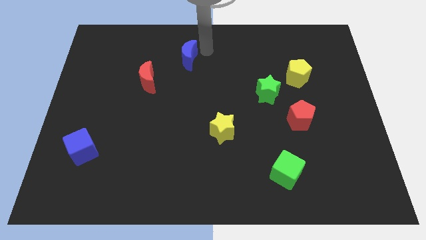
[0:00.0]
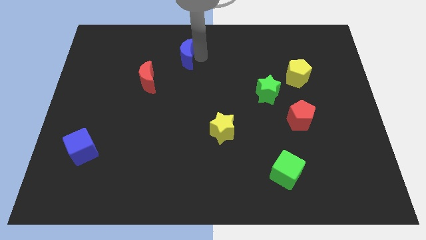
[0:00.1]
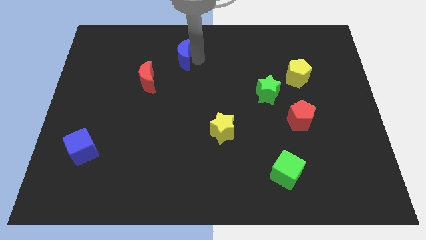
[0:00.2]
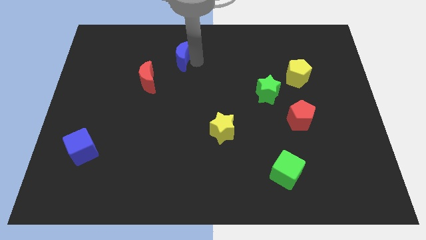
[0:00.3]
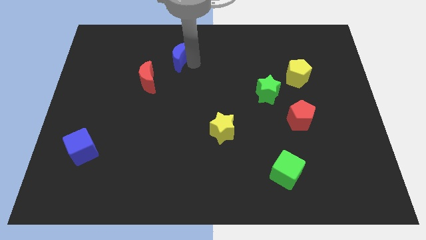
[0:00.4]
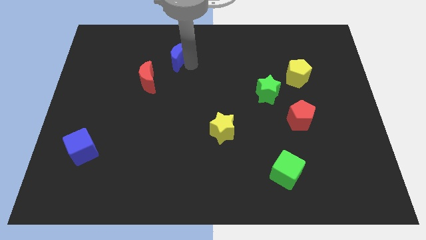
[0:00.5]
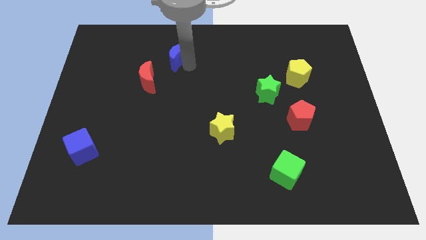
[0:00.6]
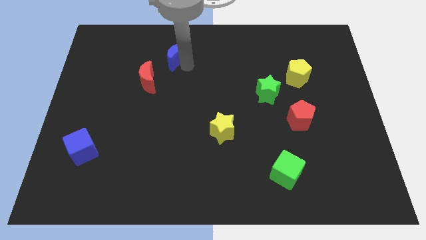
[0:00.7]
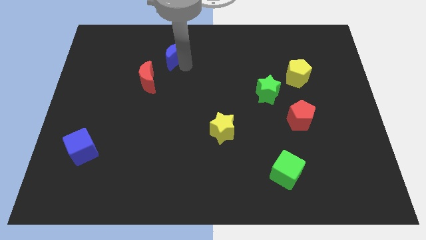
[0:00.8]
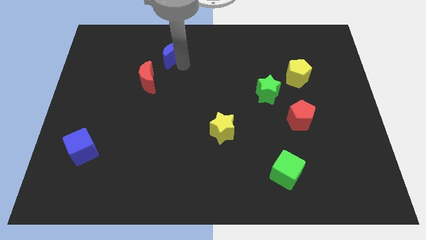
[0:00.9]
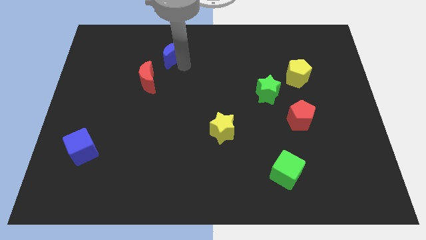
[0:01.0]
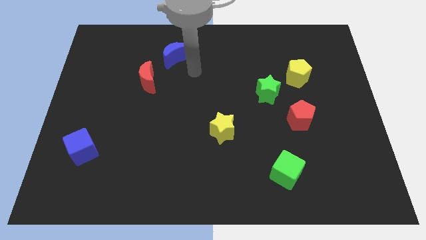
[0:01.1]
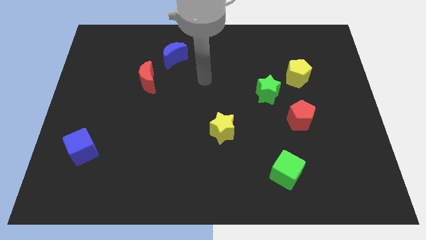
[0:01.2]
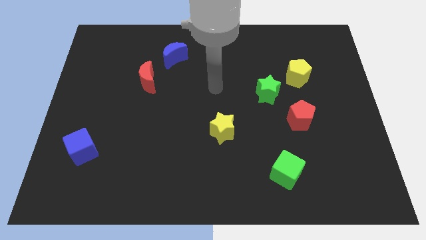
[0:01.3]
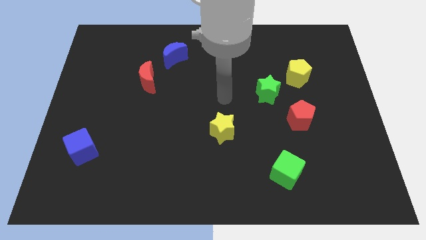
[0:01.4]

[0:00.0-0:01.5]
move the blue crescent to the top right side of the red moon

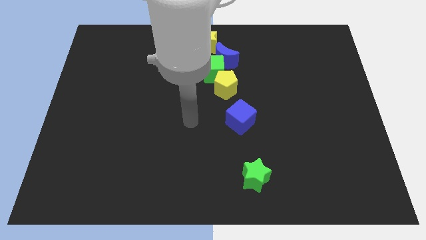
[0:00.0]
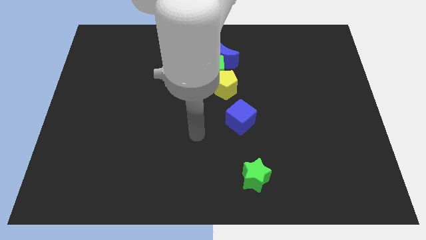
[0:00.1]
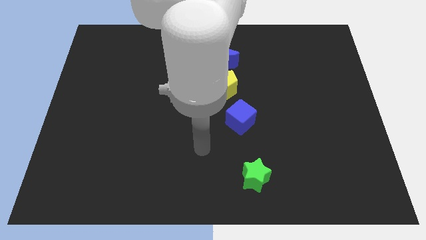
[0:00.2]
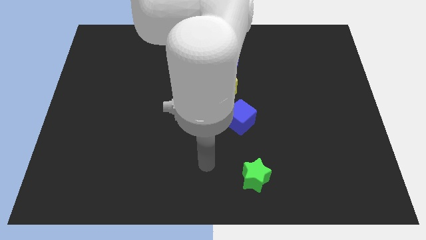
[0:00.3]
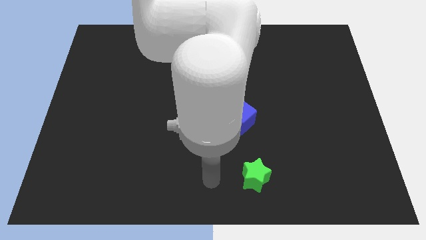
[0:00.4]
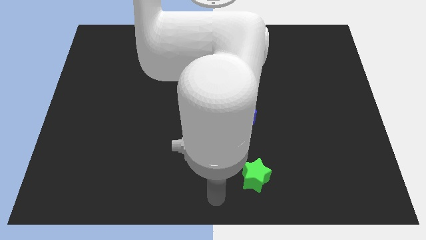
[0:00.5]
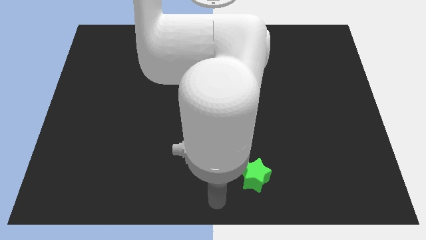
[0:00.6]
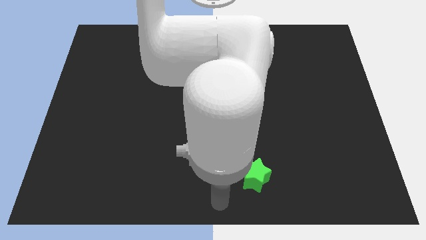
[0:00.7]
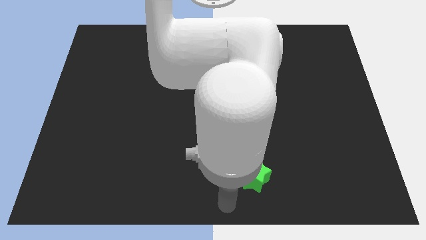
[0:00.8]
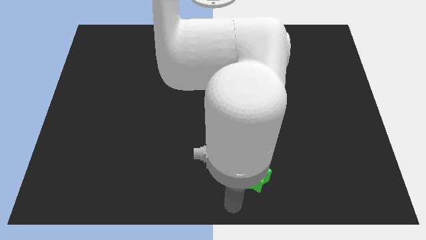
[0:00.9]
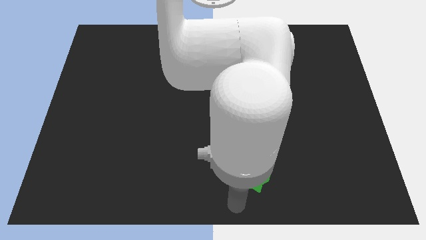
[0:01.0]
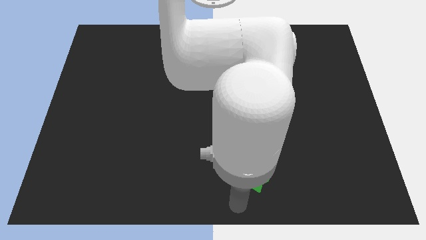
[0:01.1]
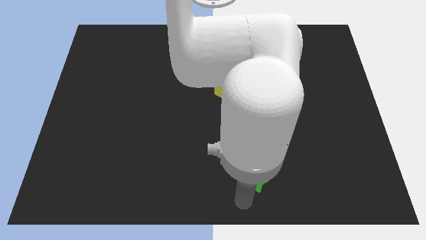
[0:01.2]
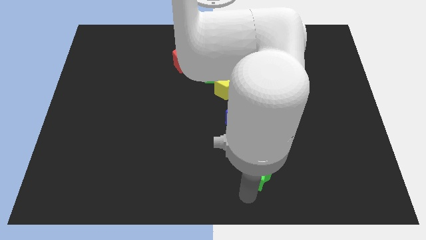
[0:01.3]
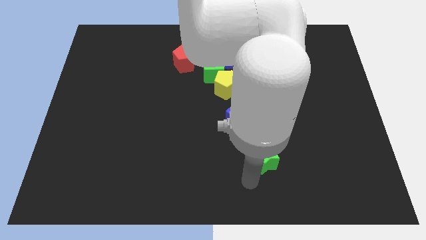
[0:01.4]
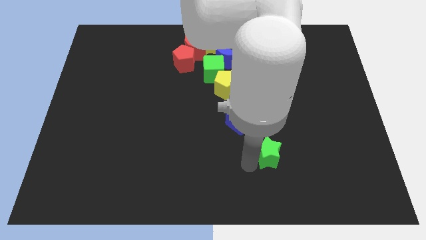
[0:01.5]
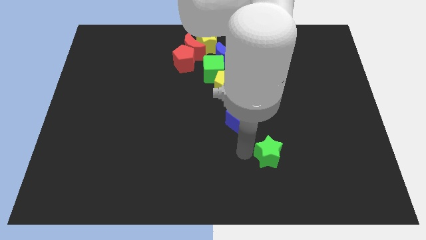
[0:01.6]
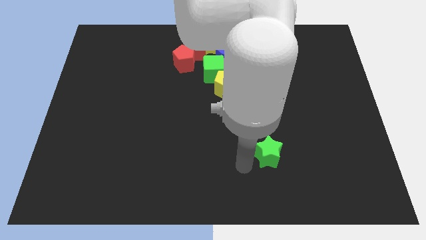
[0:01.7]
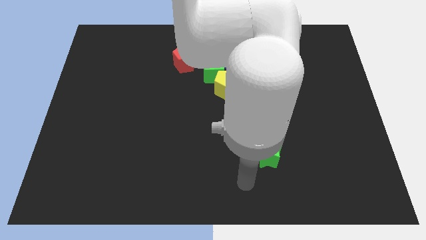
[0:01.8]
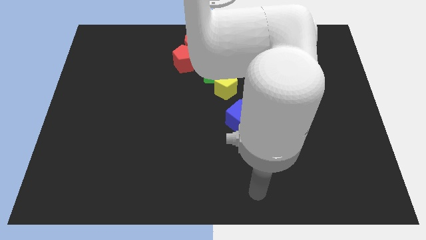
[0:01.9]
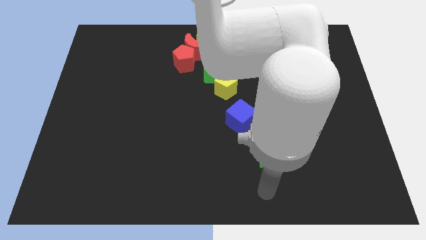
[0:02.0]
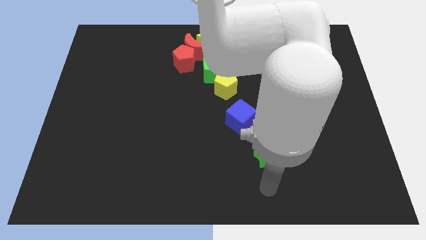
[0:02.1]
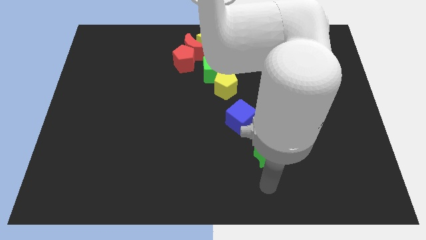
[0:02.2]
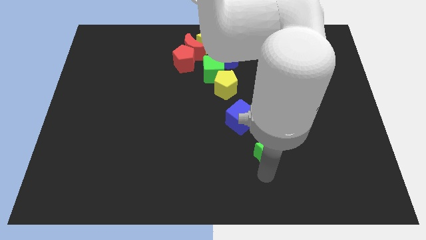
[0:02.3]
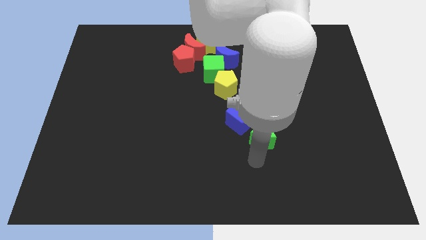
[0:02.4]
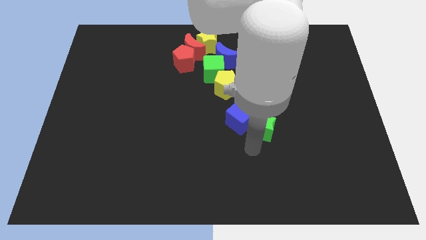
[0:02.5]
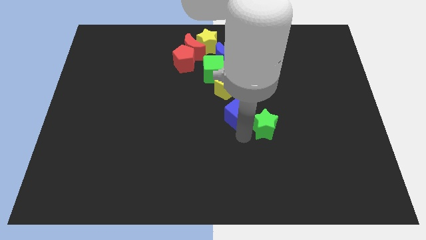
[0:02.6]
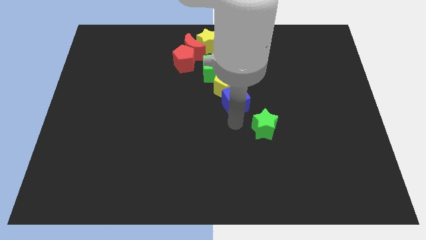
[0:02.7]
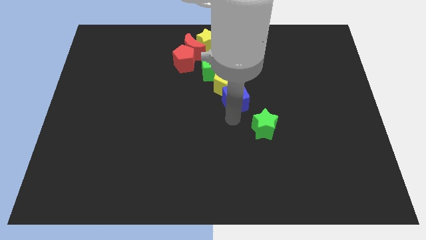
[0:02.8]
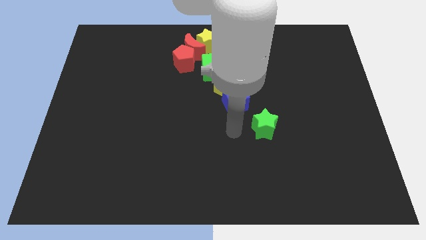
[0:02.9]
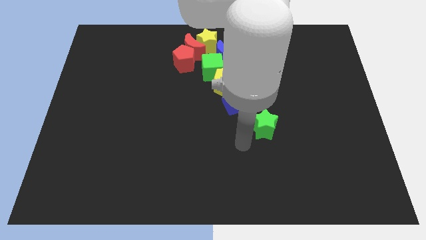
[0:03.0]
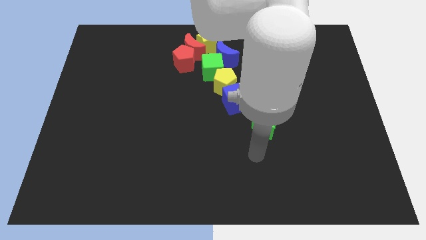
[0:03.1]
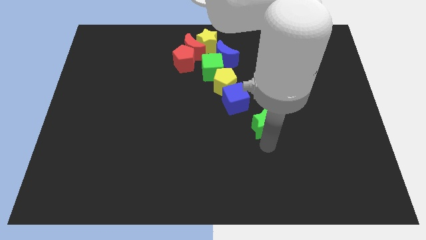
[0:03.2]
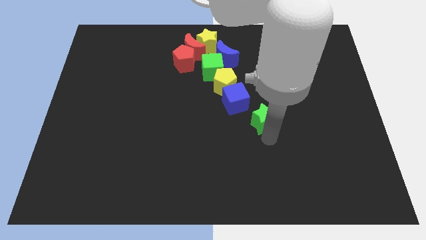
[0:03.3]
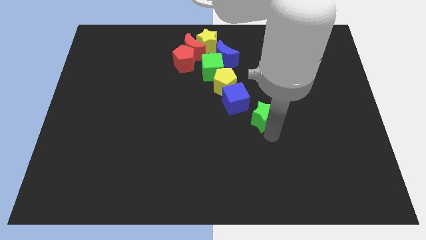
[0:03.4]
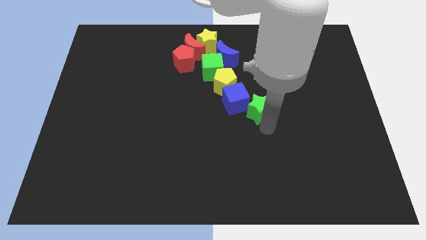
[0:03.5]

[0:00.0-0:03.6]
push the green star upwards on the board

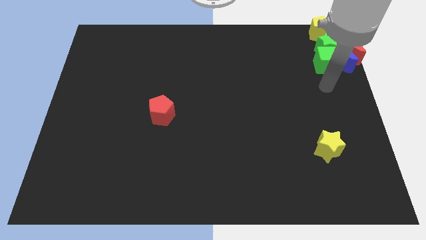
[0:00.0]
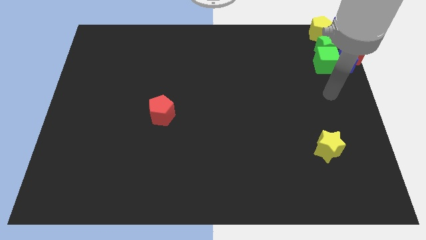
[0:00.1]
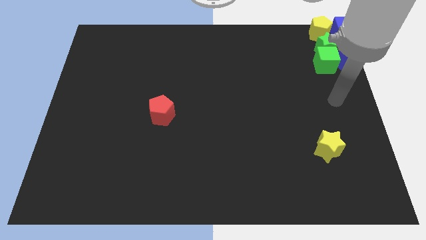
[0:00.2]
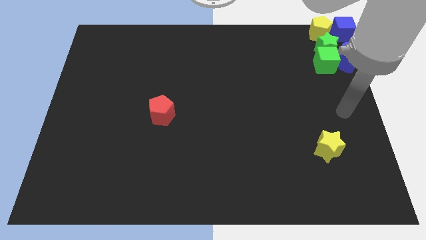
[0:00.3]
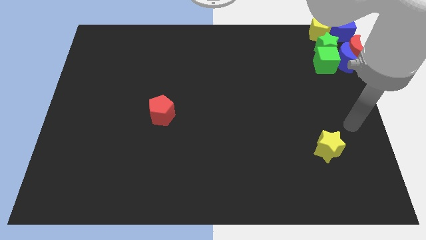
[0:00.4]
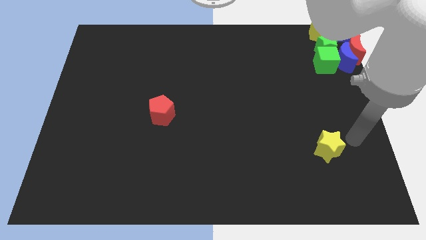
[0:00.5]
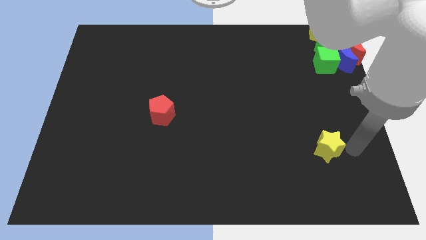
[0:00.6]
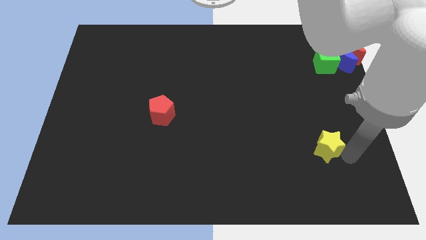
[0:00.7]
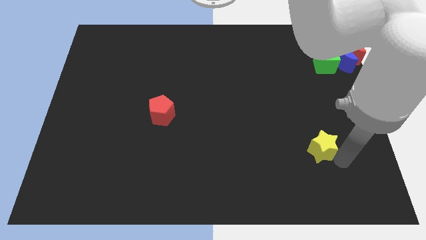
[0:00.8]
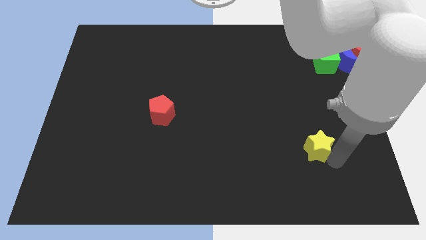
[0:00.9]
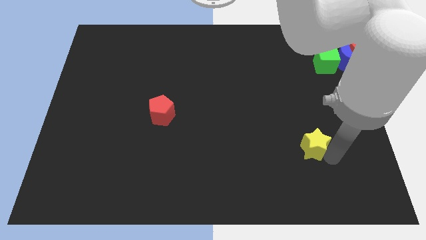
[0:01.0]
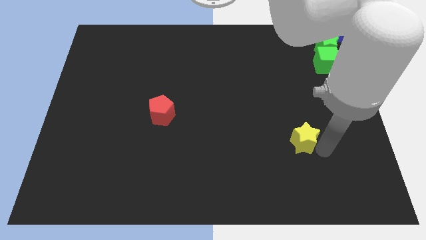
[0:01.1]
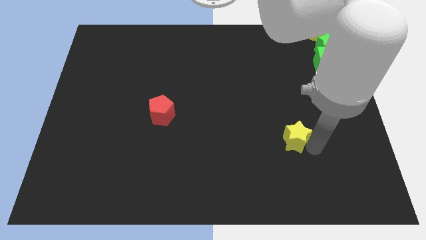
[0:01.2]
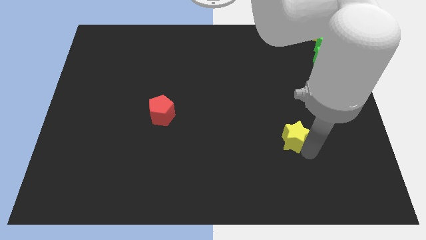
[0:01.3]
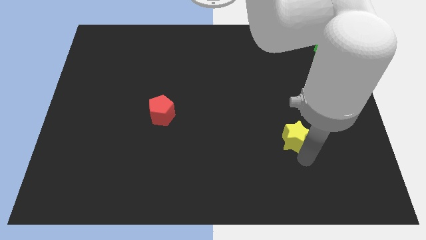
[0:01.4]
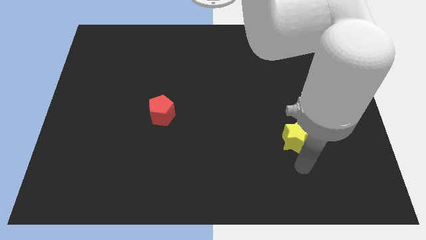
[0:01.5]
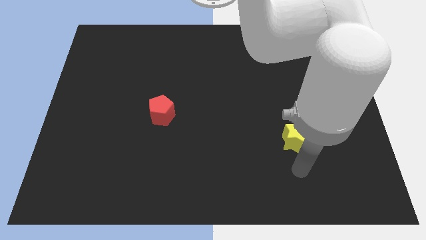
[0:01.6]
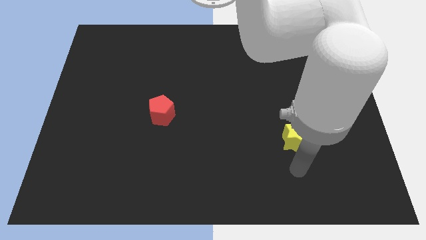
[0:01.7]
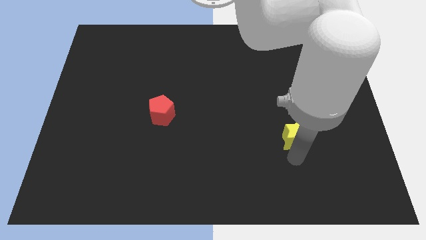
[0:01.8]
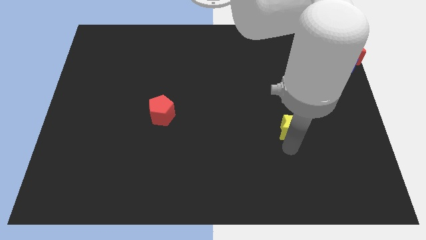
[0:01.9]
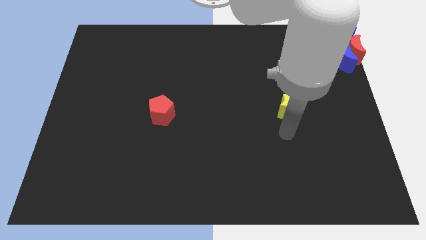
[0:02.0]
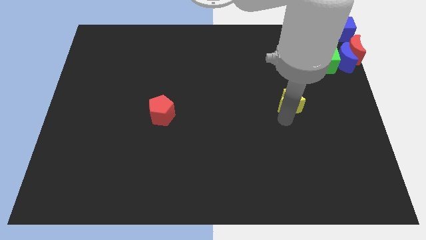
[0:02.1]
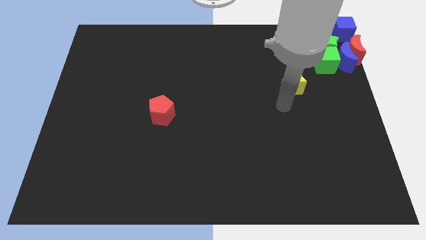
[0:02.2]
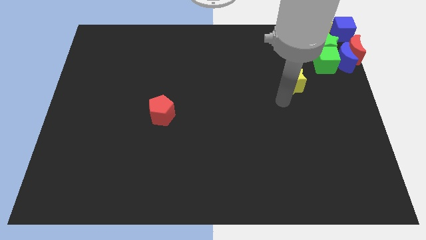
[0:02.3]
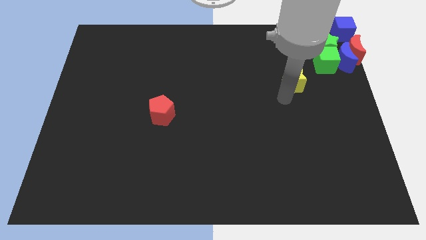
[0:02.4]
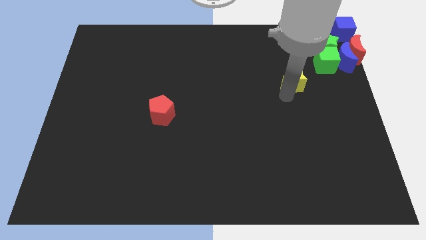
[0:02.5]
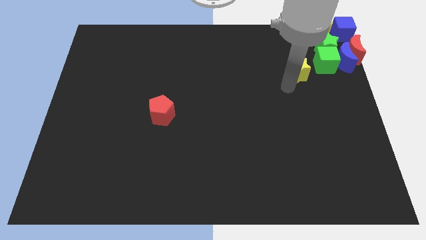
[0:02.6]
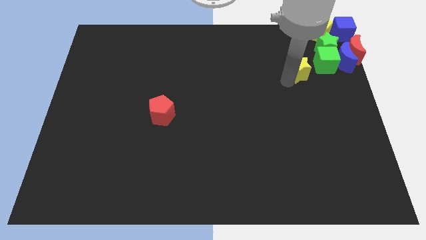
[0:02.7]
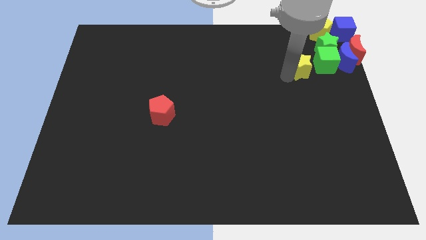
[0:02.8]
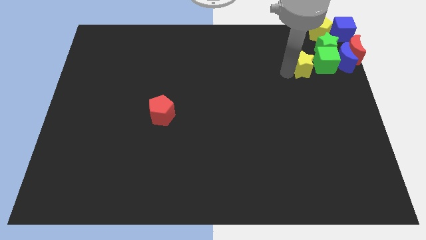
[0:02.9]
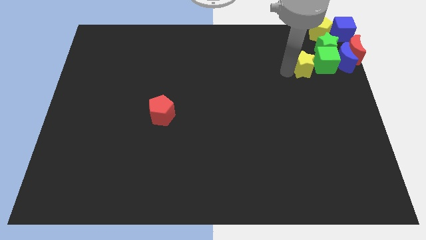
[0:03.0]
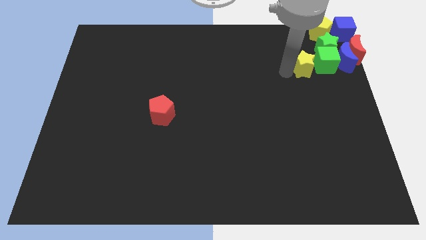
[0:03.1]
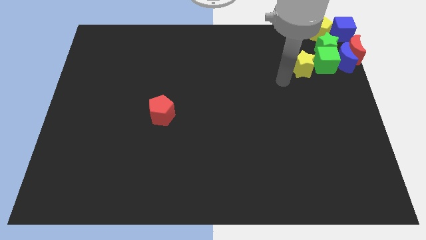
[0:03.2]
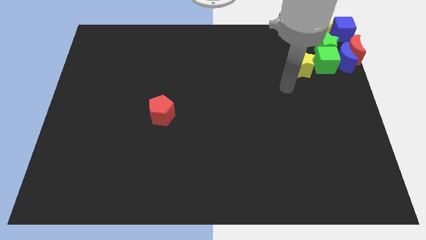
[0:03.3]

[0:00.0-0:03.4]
push the yellow star to the left side of the green cube

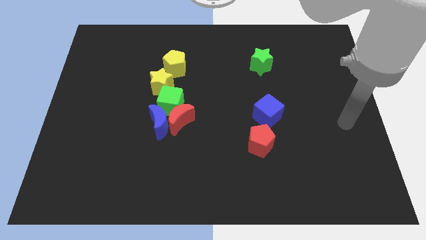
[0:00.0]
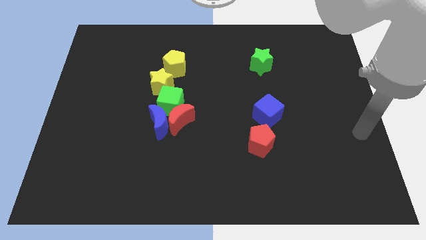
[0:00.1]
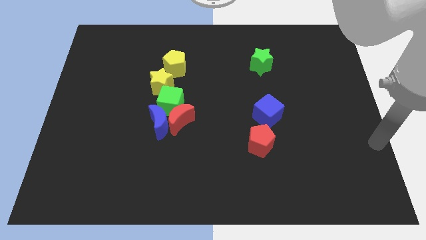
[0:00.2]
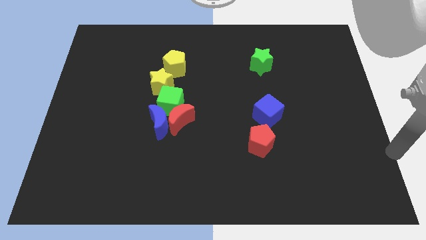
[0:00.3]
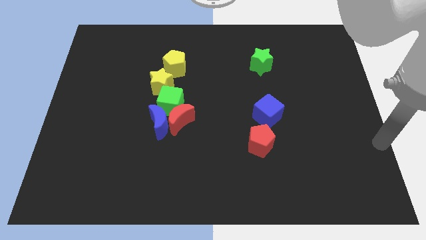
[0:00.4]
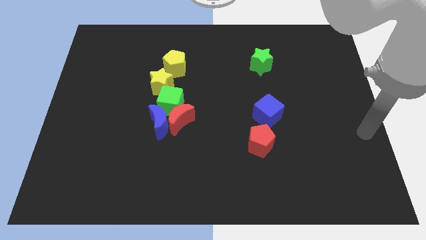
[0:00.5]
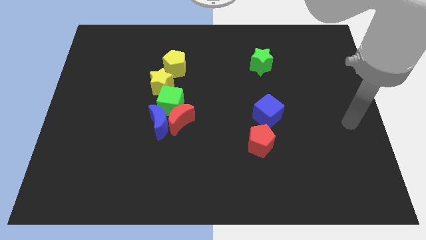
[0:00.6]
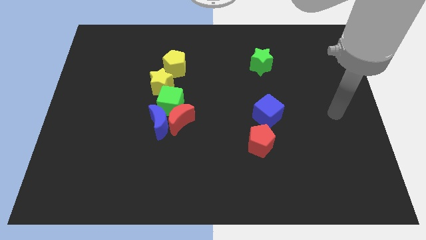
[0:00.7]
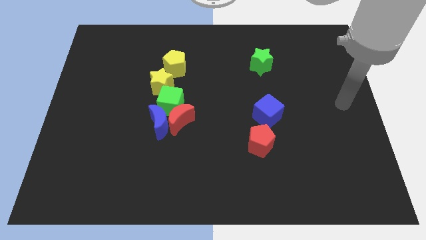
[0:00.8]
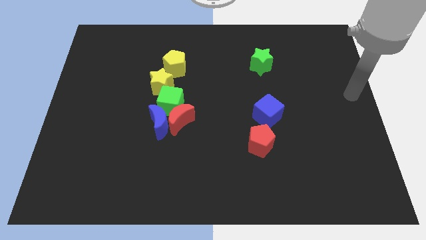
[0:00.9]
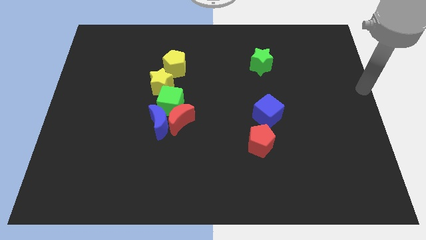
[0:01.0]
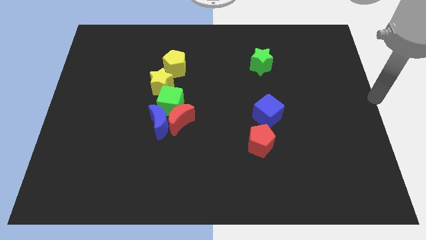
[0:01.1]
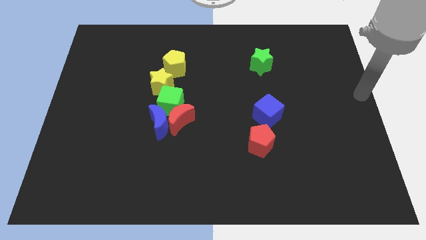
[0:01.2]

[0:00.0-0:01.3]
place your arm at the center right corner
